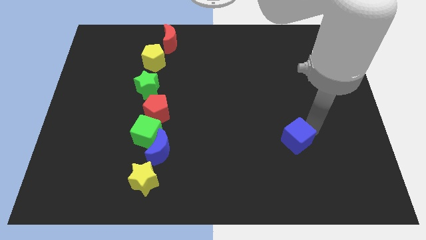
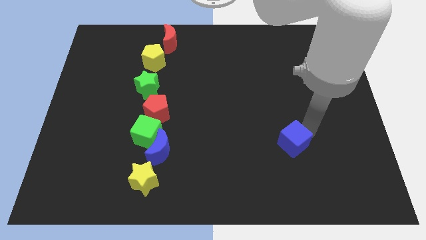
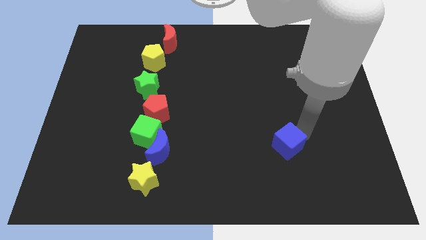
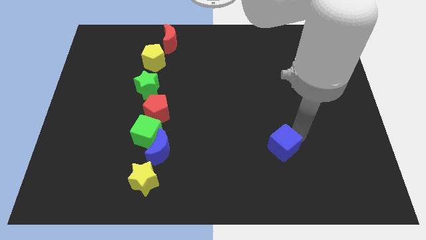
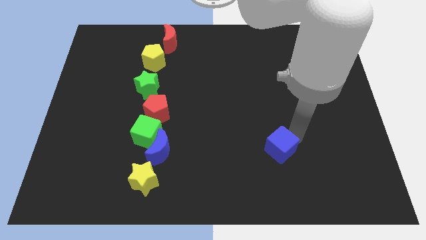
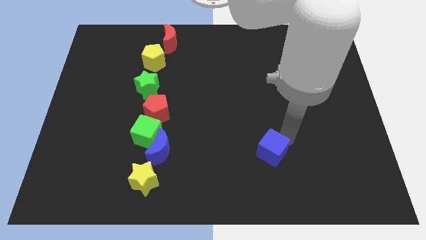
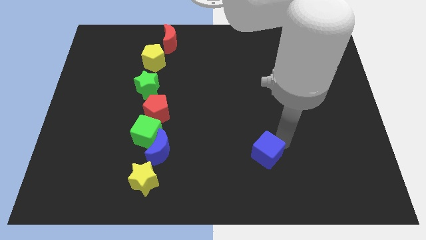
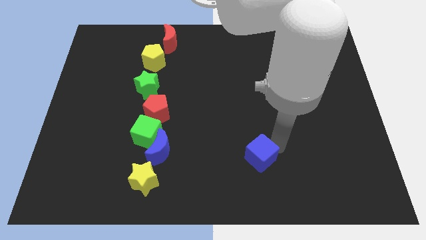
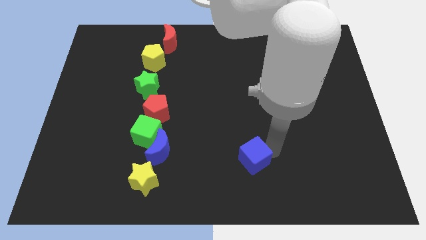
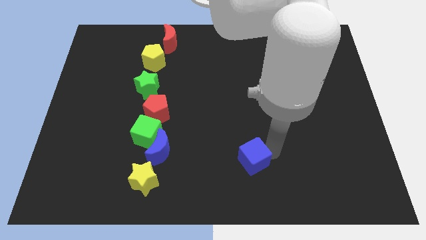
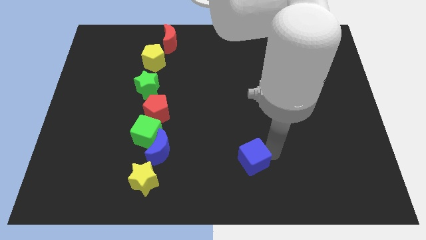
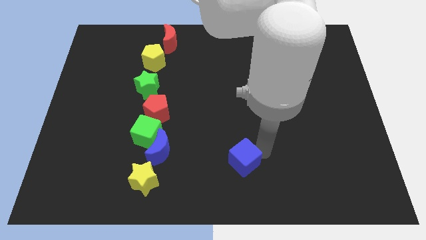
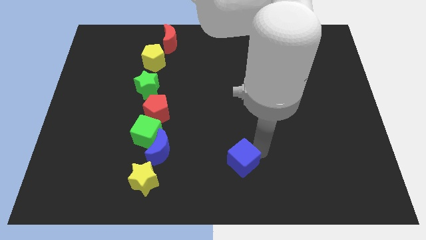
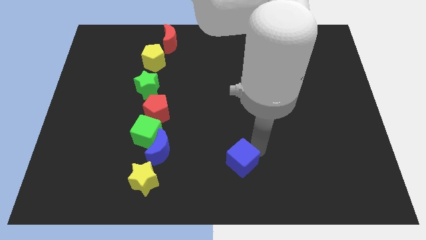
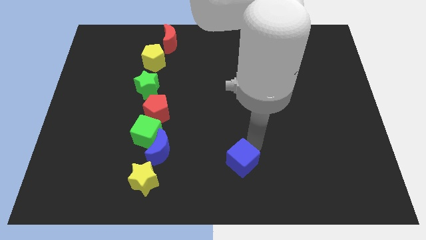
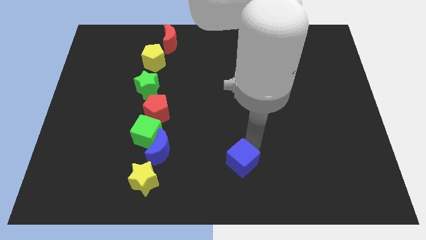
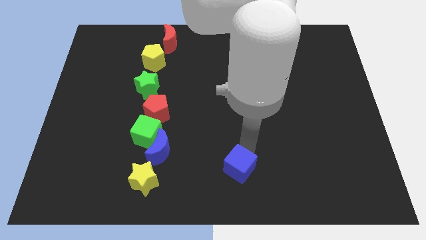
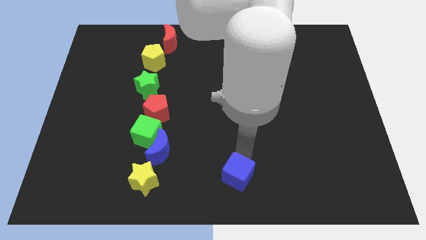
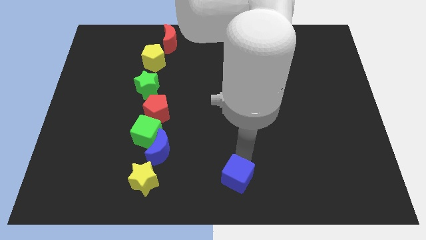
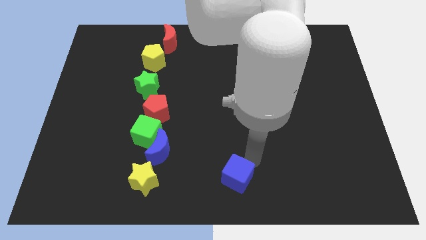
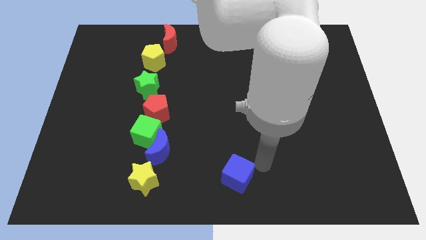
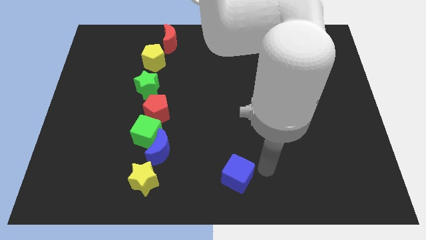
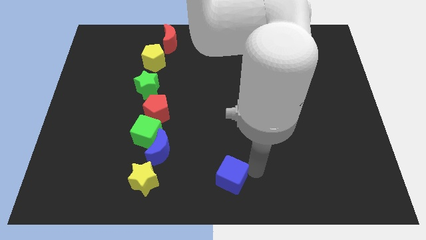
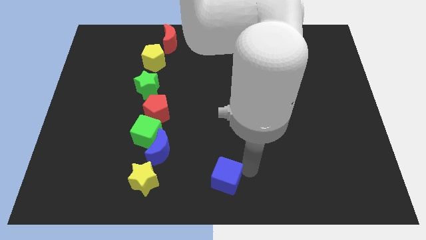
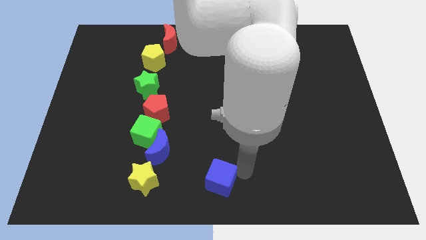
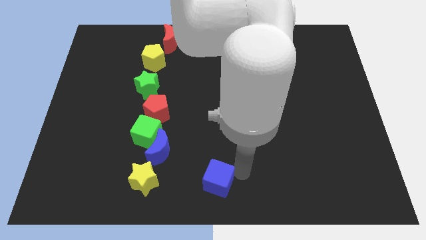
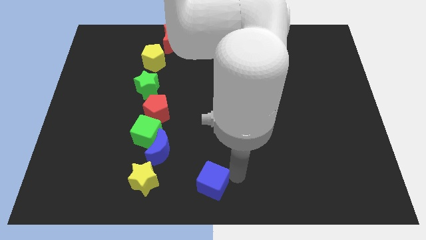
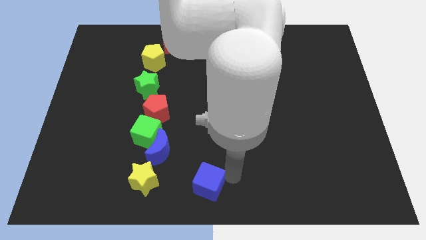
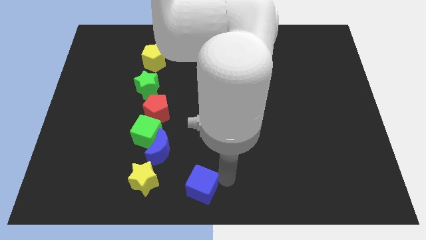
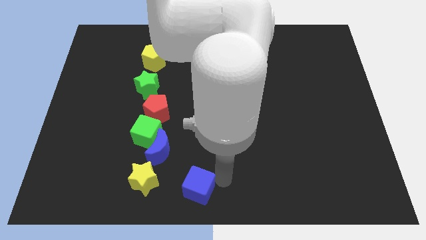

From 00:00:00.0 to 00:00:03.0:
move the blue cube to the right of the yellow star

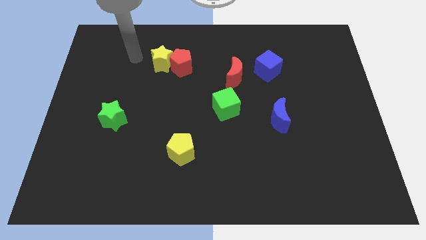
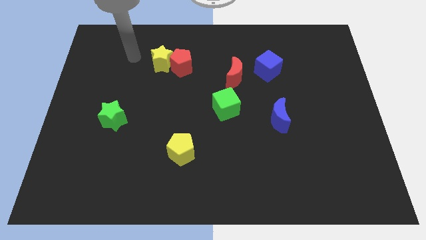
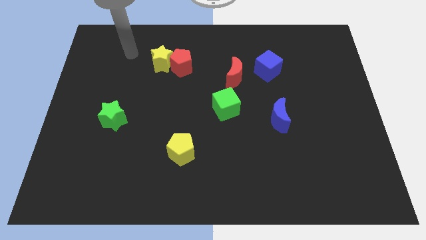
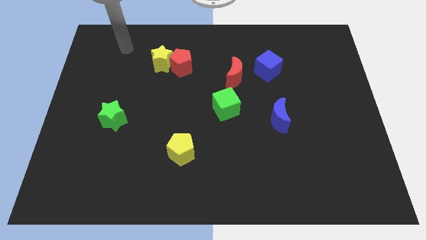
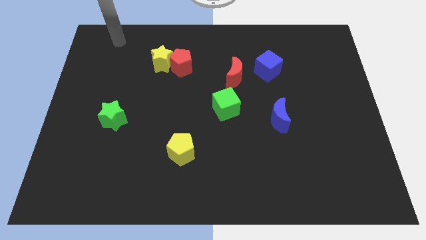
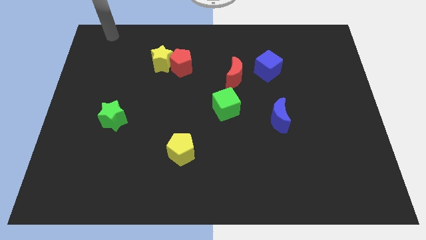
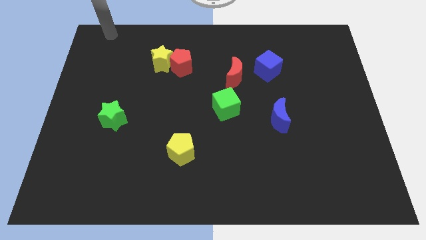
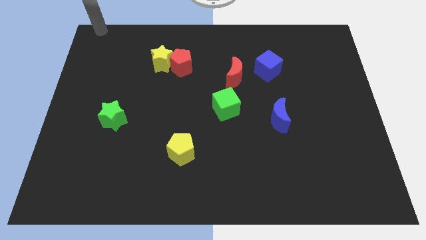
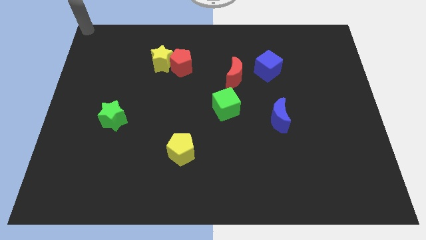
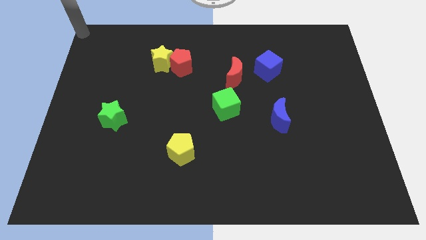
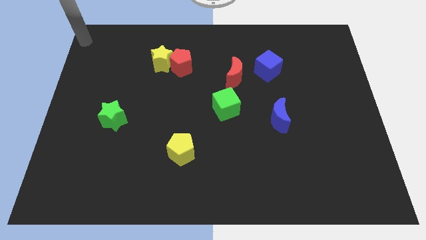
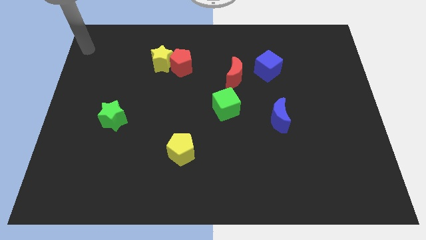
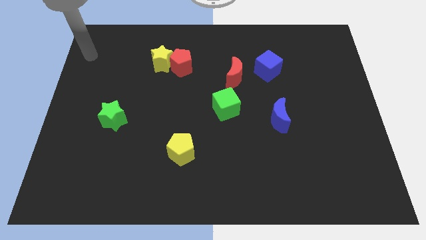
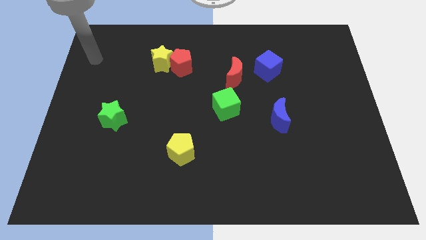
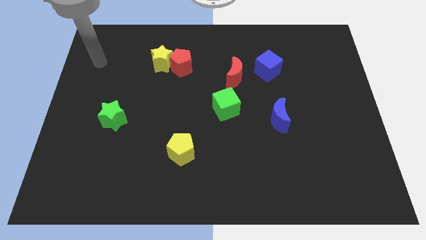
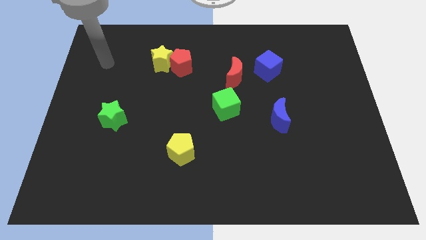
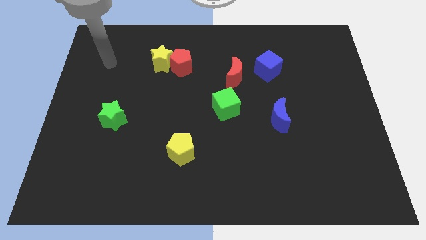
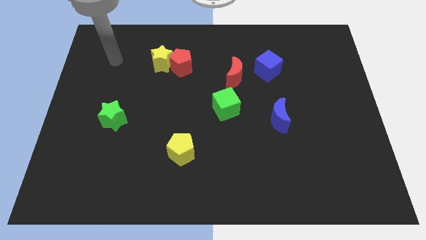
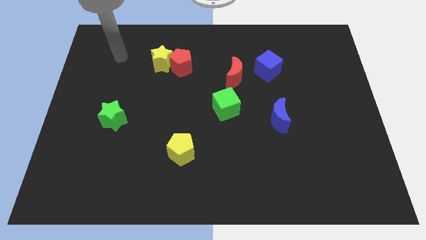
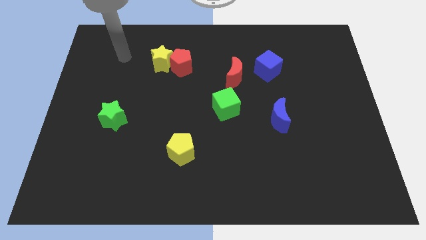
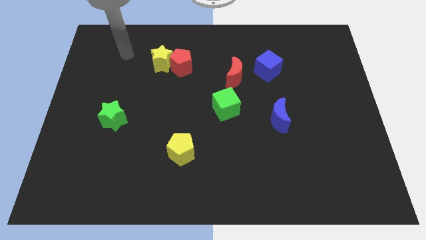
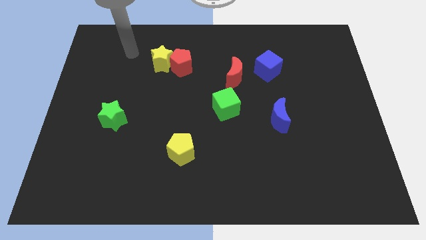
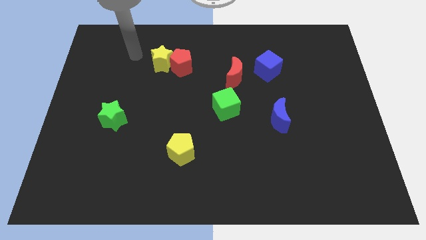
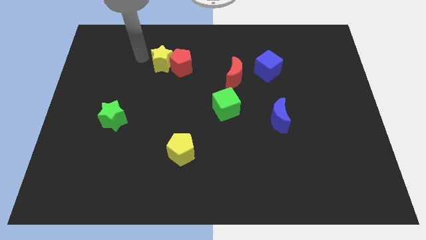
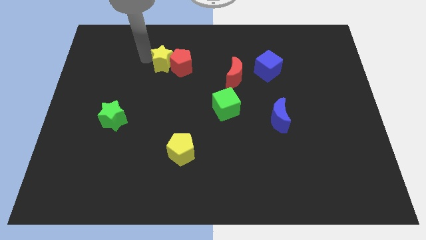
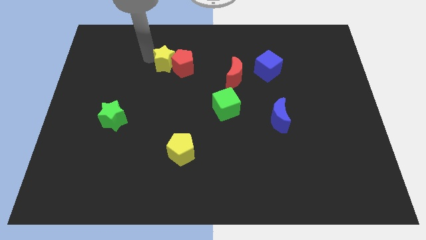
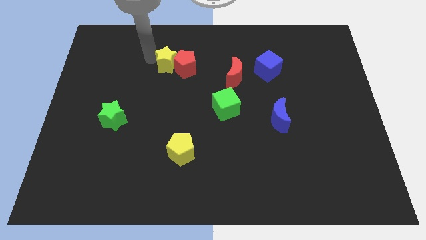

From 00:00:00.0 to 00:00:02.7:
push the yellow star along with red pentagon slightly to the right

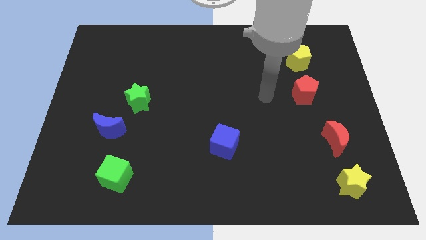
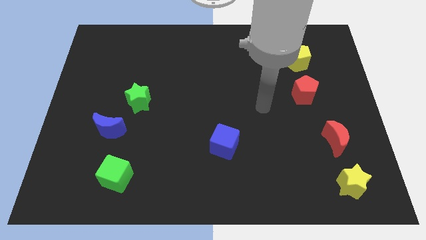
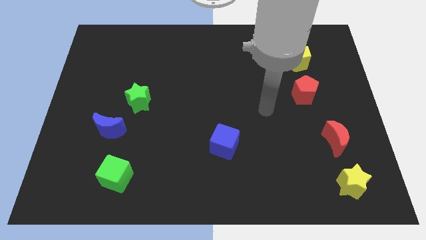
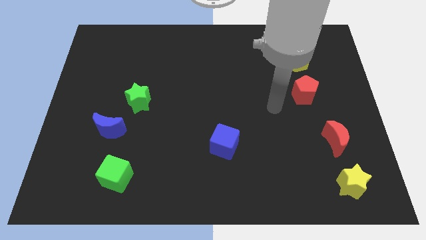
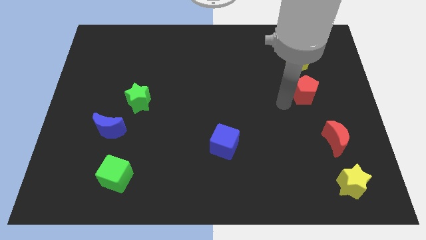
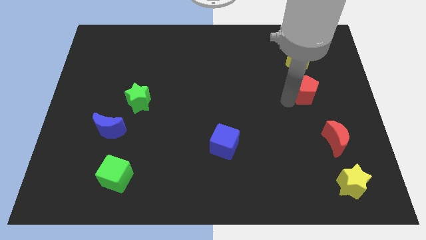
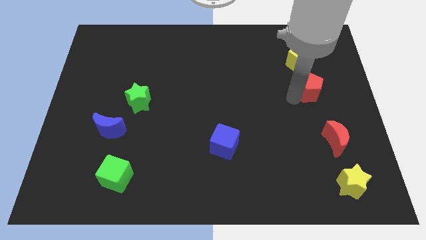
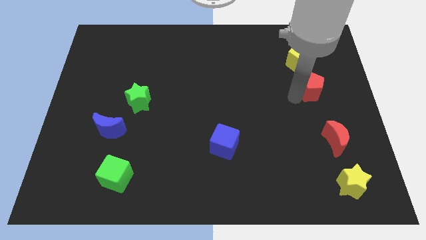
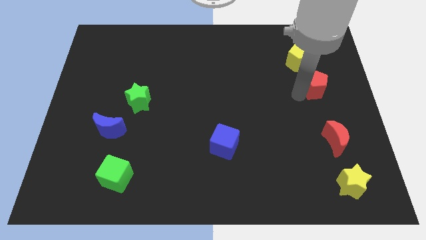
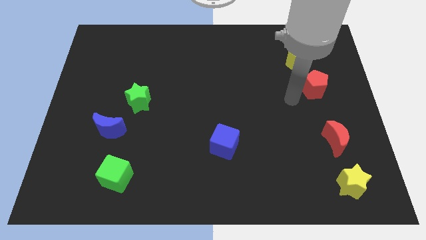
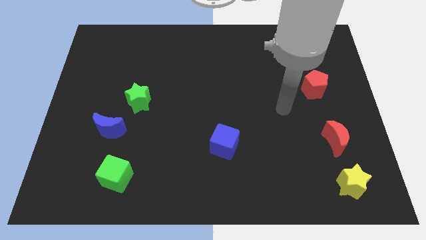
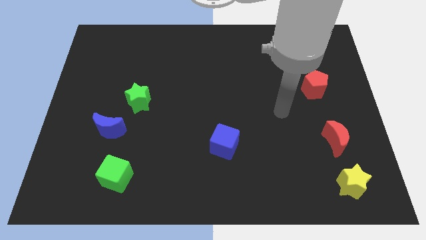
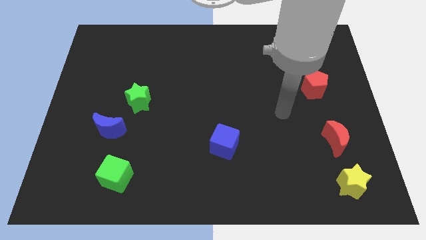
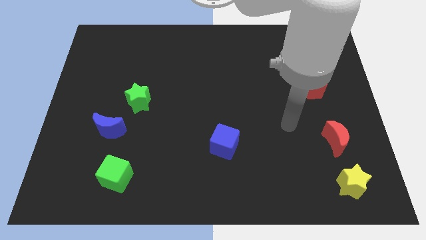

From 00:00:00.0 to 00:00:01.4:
slightly push the red pentagon to the bottom of the yellow pentagon

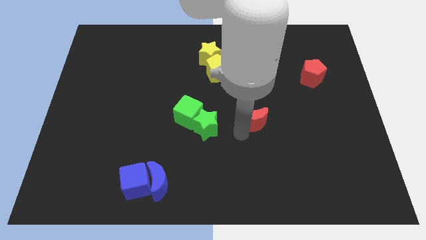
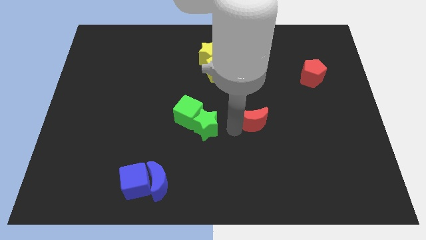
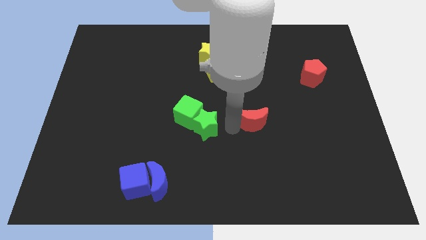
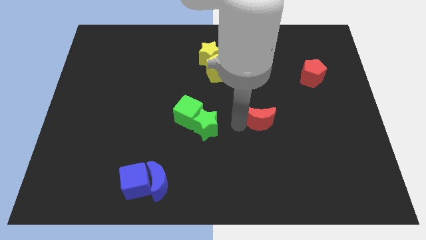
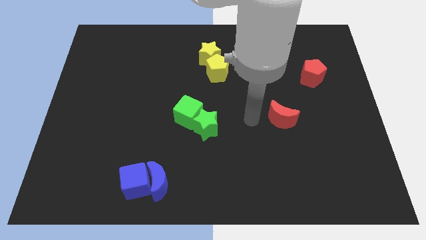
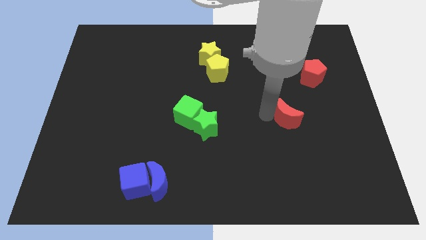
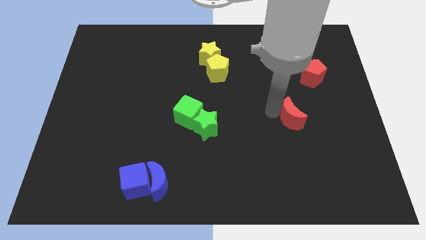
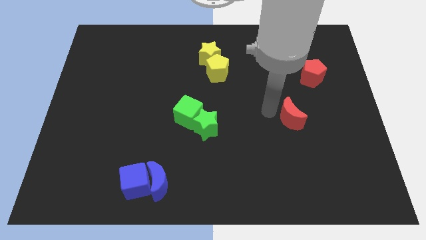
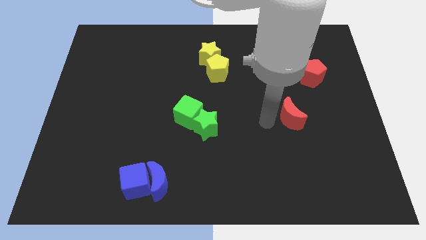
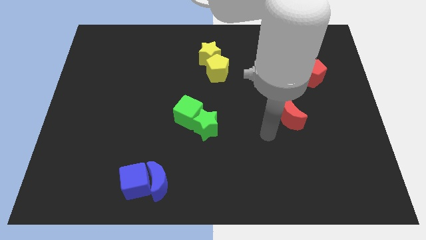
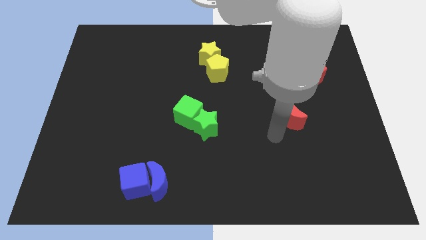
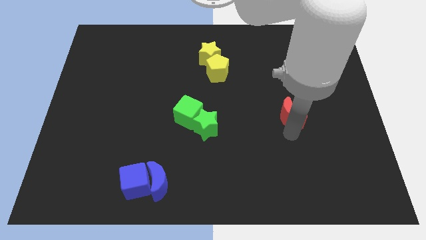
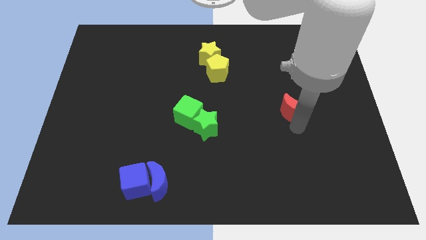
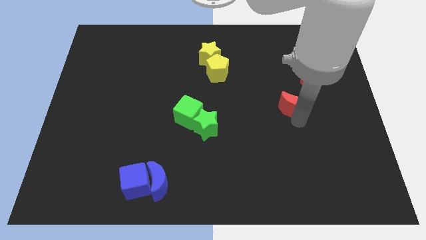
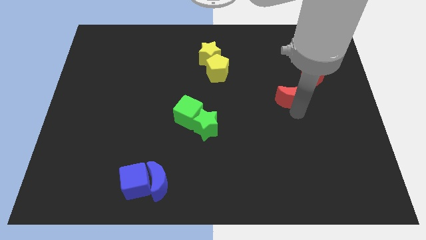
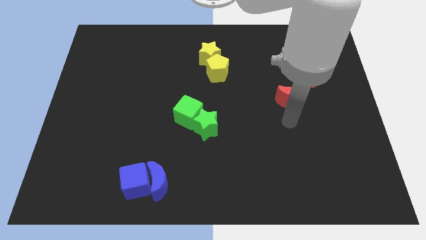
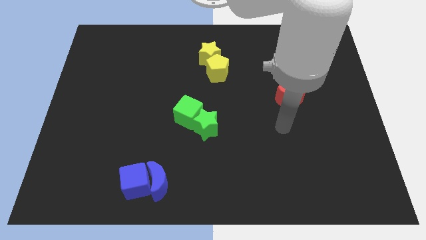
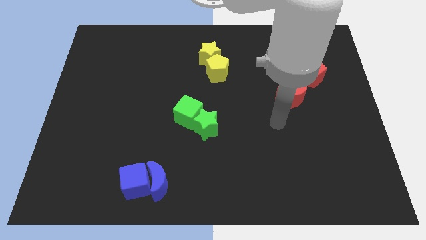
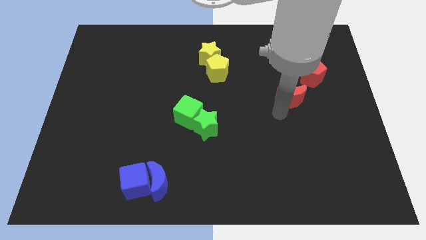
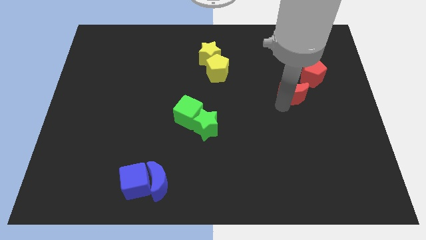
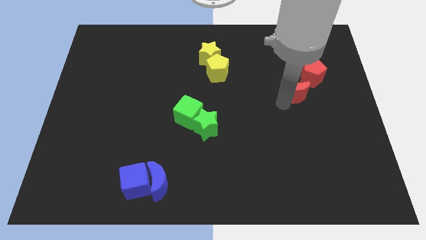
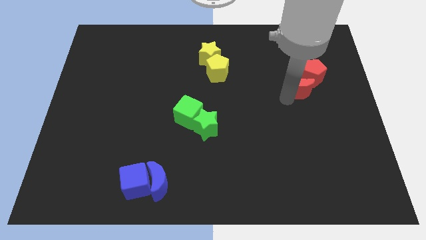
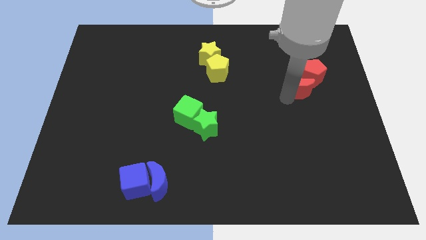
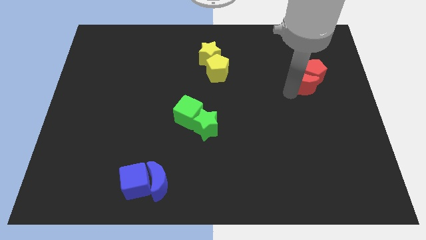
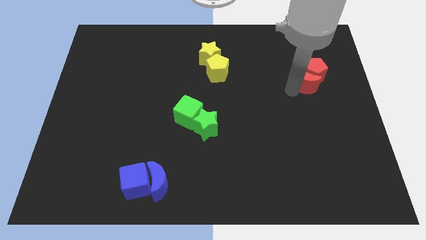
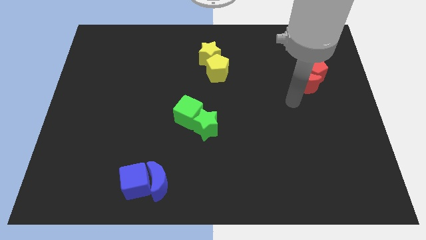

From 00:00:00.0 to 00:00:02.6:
move red crescent into the red pentagon
